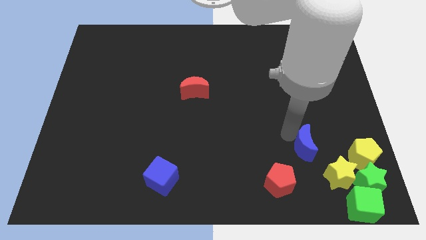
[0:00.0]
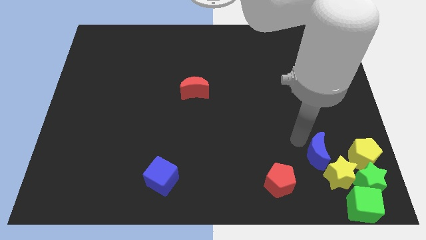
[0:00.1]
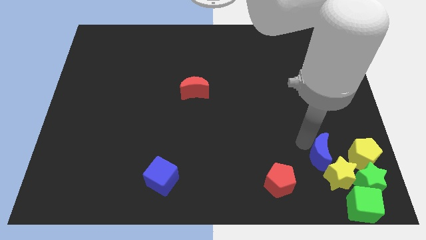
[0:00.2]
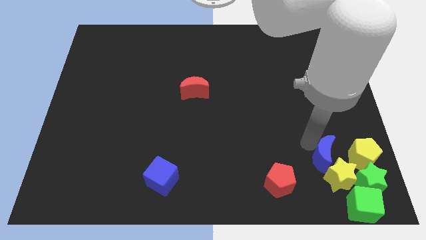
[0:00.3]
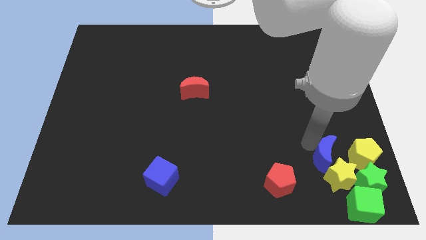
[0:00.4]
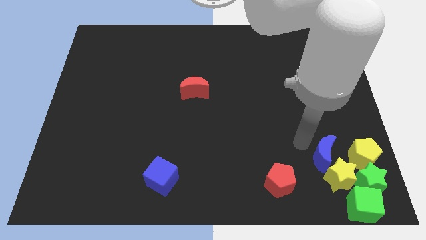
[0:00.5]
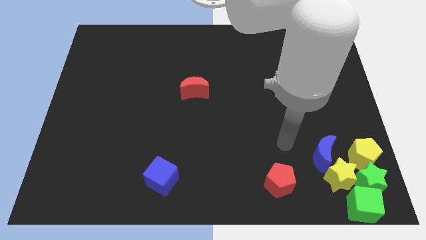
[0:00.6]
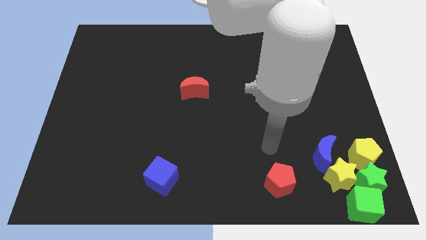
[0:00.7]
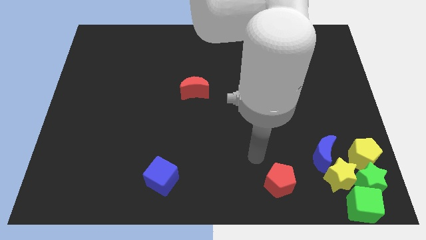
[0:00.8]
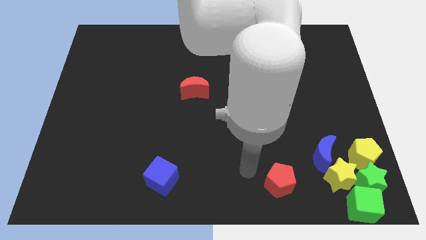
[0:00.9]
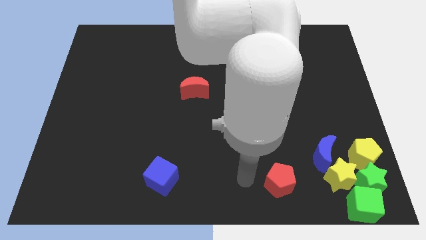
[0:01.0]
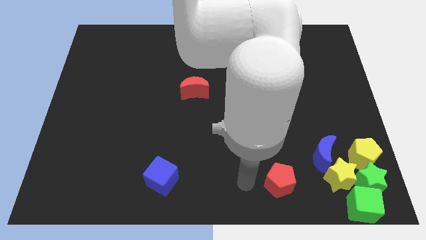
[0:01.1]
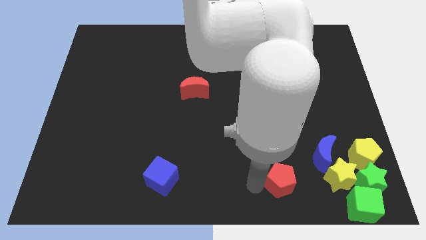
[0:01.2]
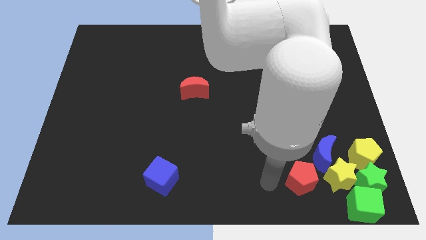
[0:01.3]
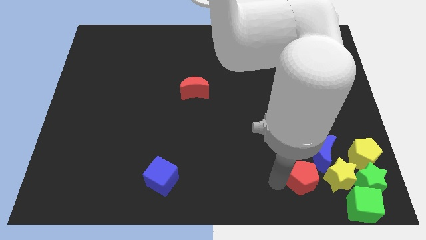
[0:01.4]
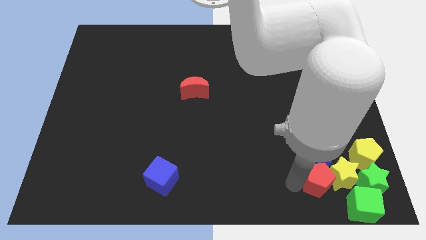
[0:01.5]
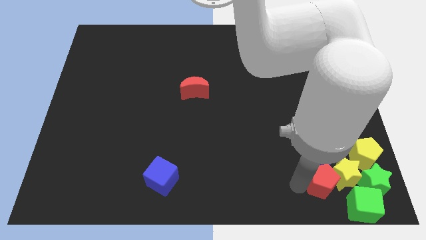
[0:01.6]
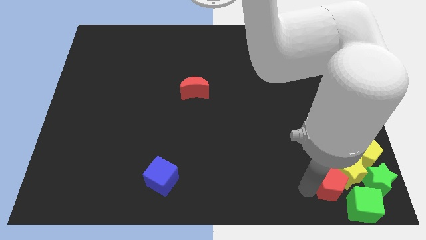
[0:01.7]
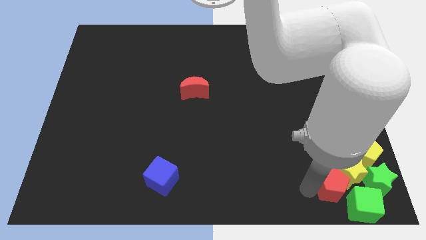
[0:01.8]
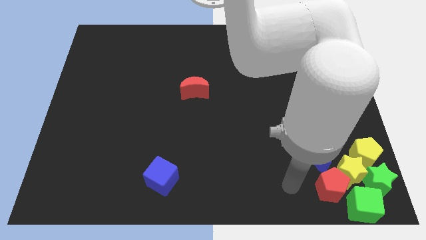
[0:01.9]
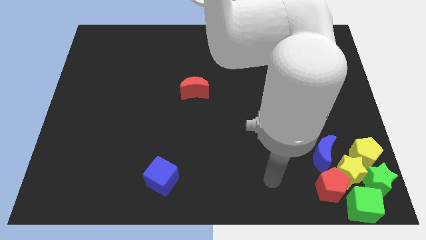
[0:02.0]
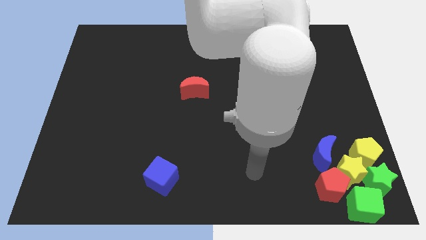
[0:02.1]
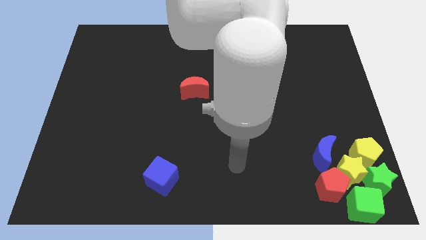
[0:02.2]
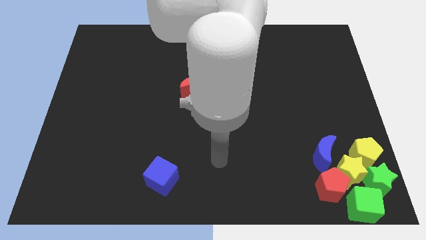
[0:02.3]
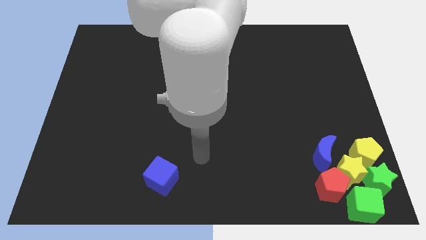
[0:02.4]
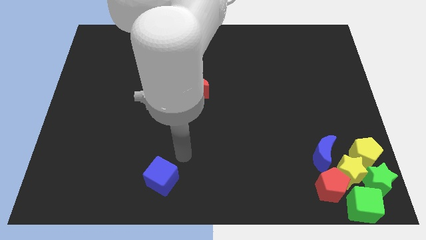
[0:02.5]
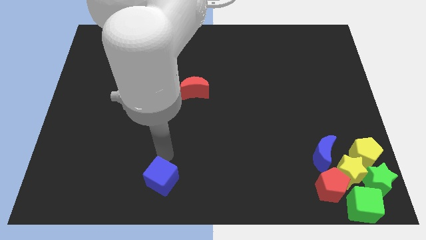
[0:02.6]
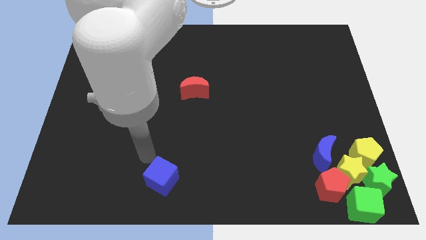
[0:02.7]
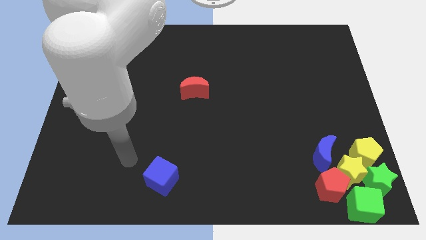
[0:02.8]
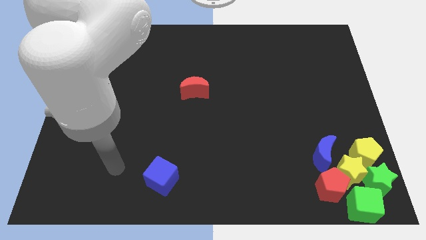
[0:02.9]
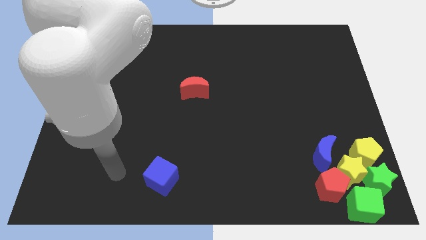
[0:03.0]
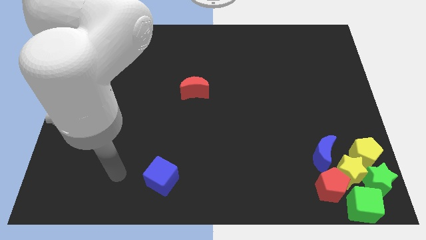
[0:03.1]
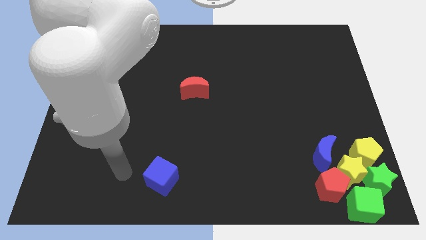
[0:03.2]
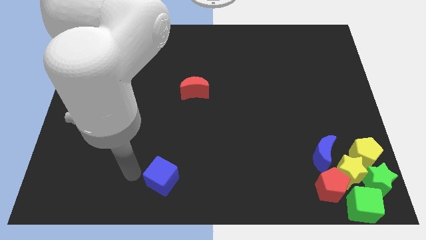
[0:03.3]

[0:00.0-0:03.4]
push the red pentagon into the group of blocks

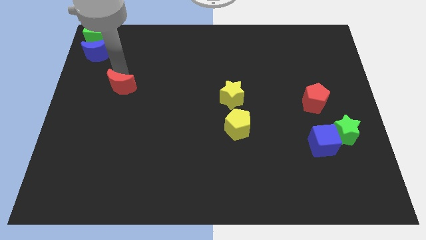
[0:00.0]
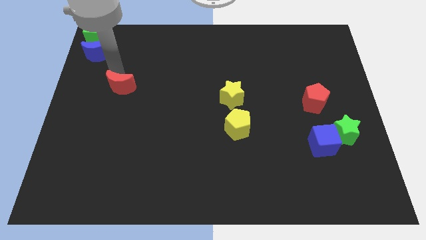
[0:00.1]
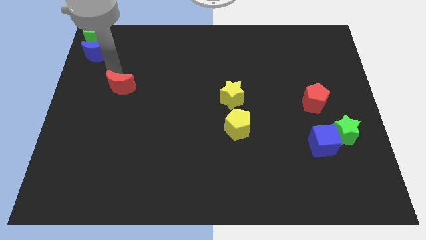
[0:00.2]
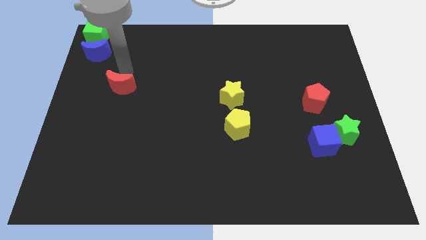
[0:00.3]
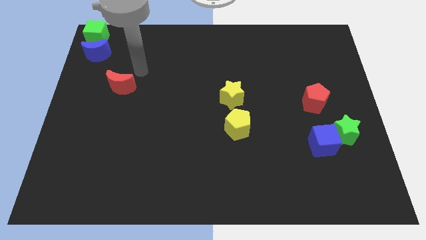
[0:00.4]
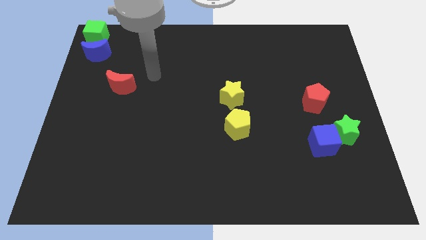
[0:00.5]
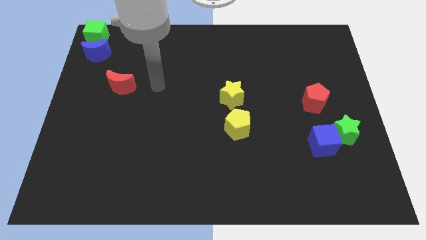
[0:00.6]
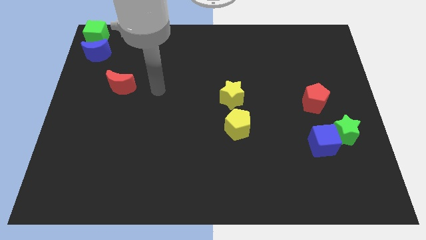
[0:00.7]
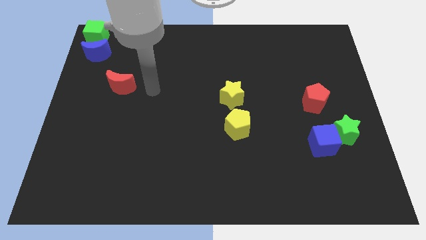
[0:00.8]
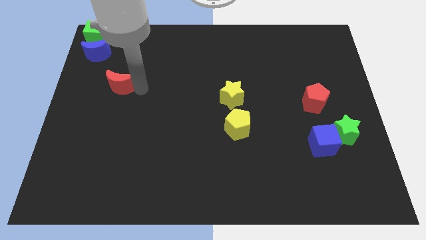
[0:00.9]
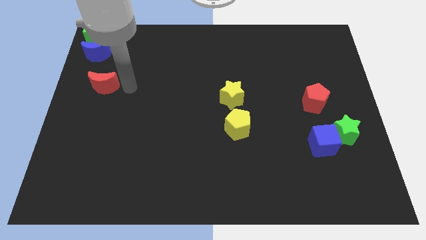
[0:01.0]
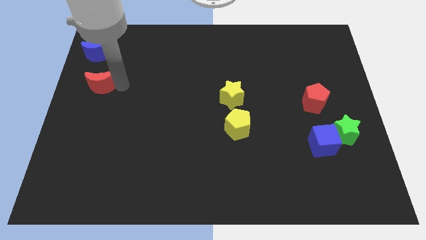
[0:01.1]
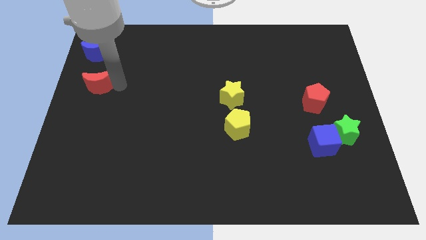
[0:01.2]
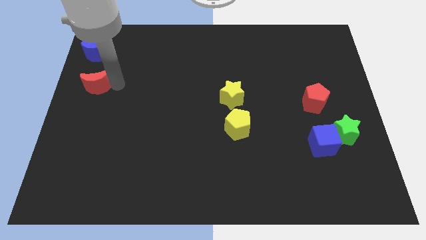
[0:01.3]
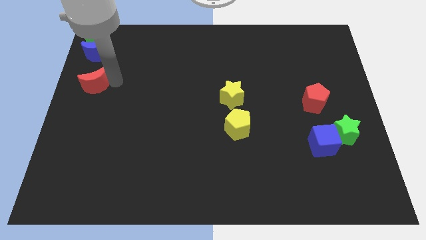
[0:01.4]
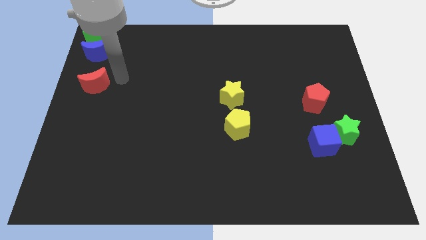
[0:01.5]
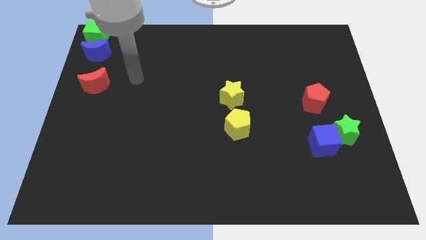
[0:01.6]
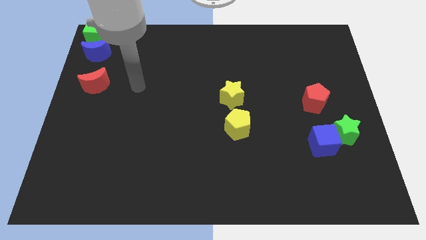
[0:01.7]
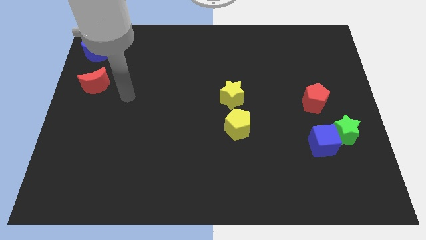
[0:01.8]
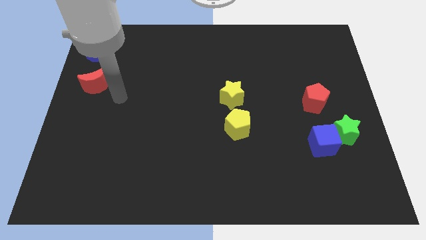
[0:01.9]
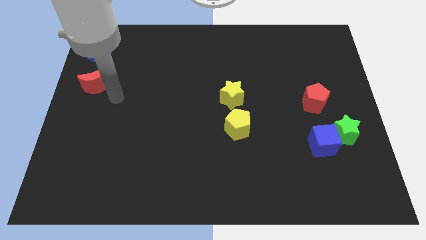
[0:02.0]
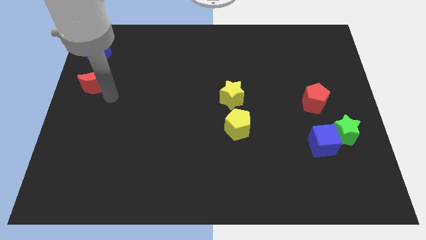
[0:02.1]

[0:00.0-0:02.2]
place the red crescent under the blue crescent

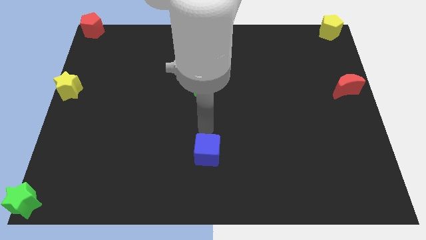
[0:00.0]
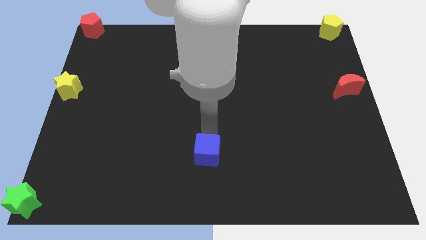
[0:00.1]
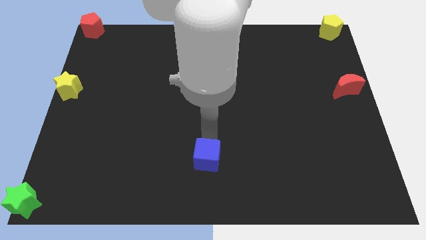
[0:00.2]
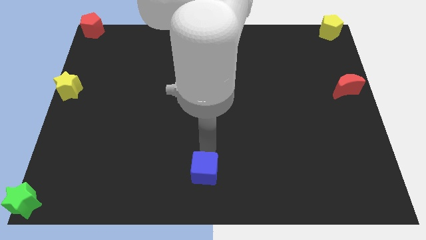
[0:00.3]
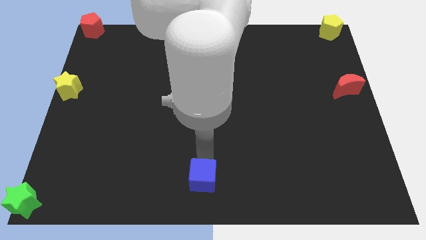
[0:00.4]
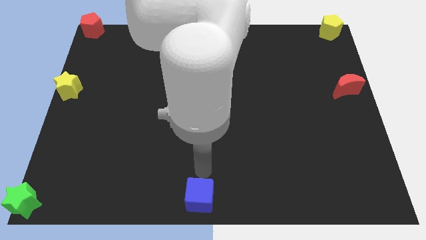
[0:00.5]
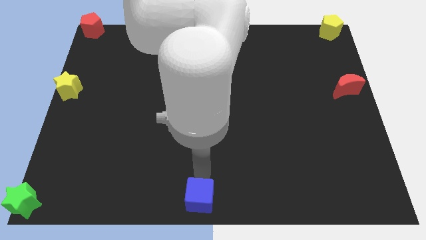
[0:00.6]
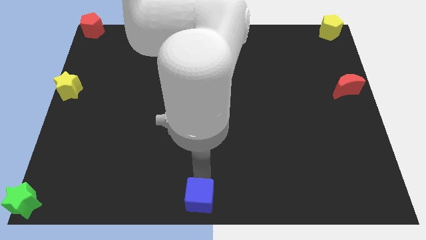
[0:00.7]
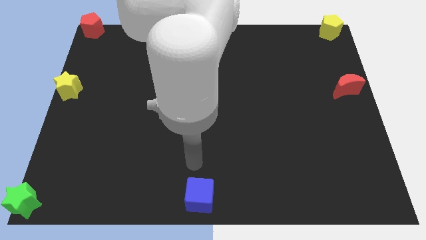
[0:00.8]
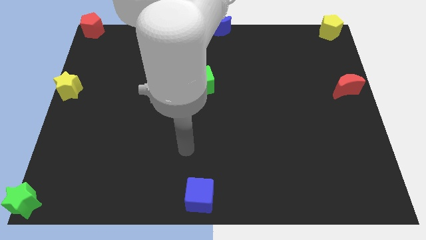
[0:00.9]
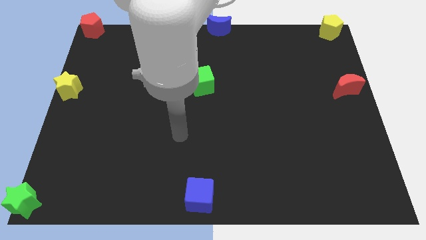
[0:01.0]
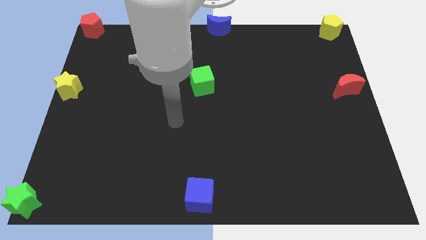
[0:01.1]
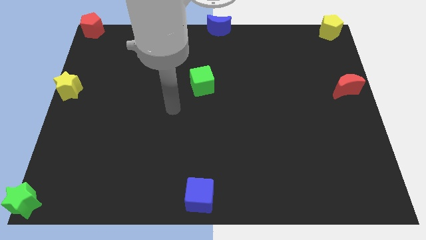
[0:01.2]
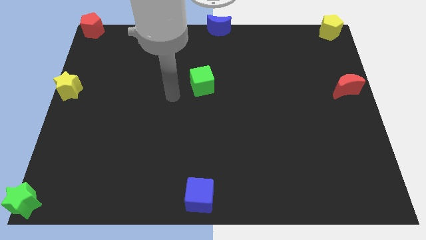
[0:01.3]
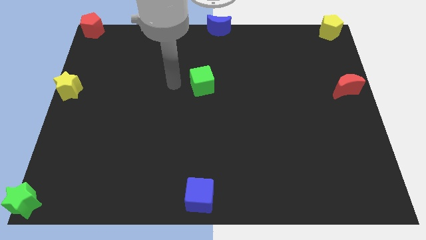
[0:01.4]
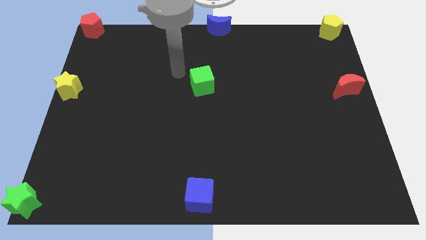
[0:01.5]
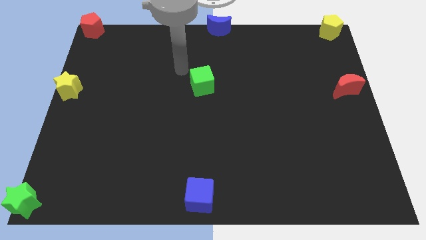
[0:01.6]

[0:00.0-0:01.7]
place the blue cube to the bottom center of the board

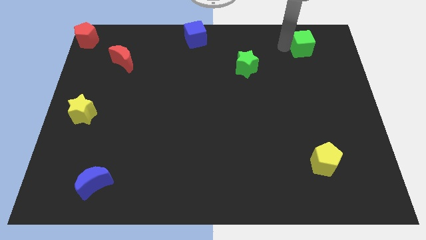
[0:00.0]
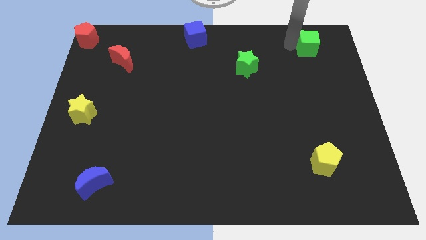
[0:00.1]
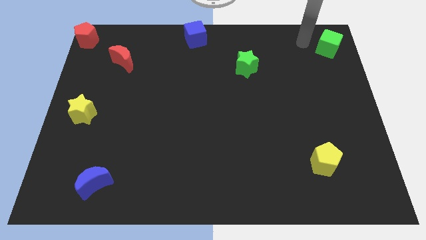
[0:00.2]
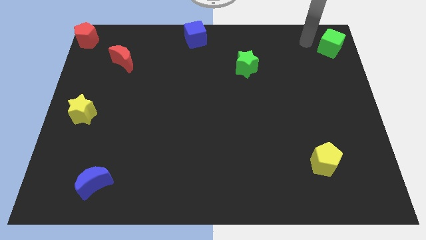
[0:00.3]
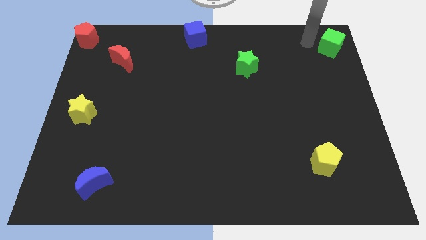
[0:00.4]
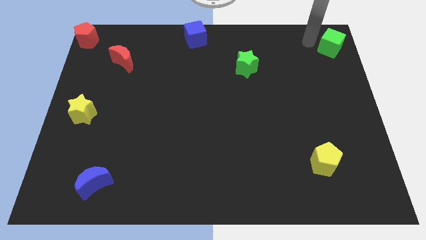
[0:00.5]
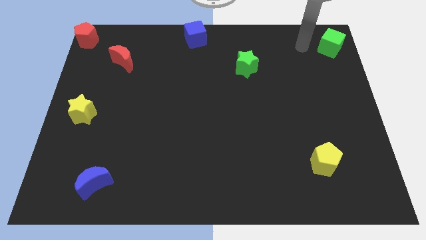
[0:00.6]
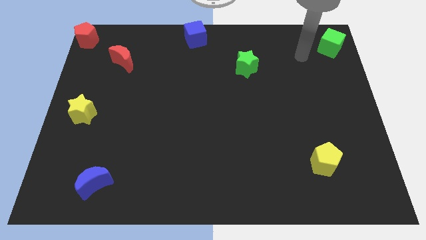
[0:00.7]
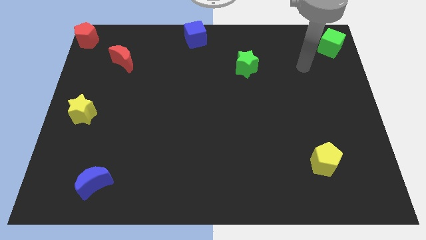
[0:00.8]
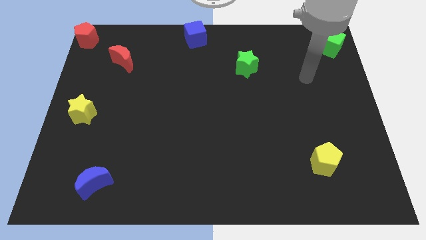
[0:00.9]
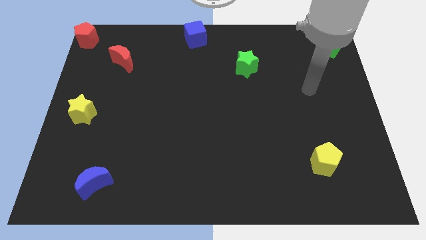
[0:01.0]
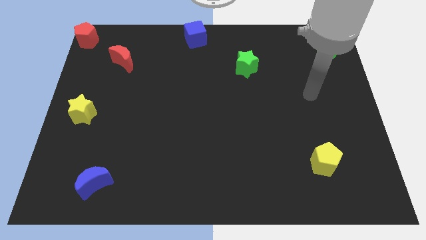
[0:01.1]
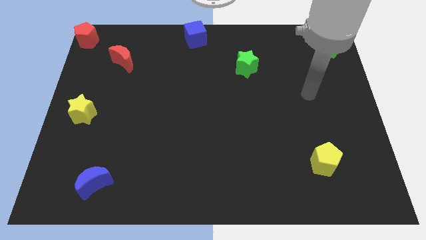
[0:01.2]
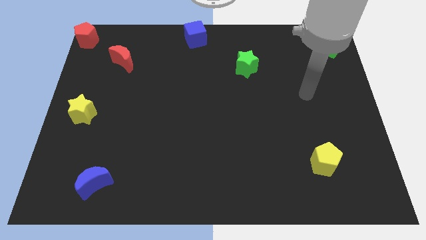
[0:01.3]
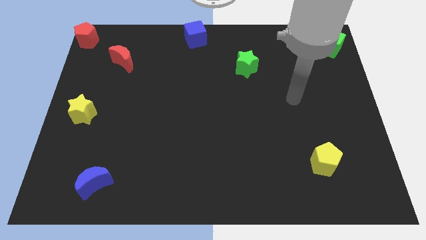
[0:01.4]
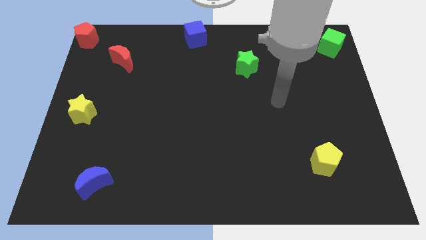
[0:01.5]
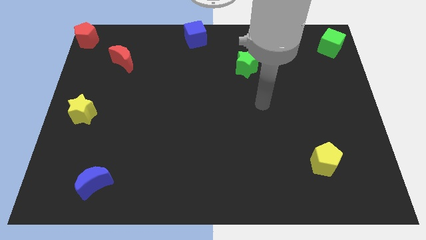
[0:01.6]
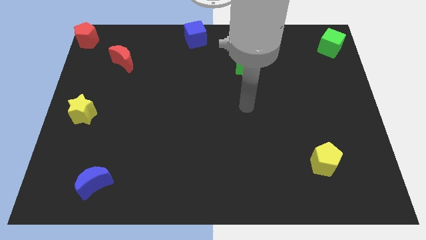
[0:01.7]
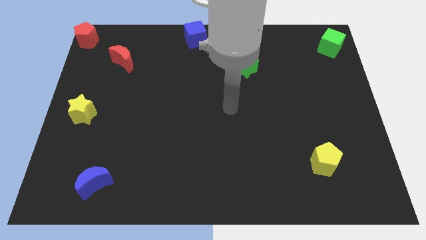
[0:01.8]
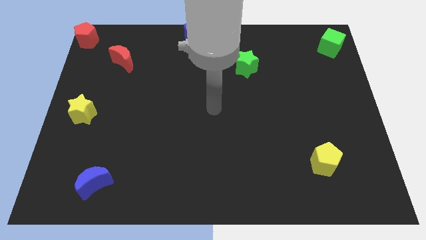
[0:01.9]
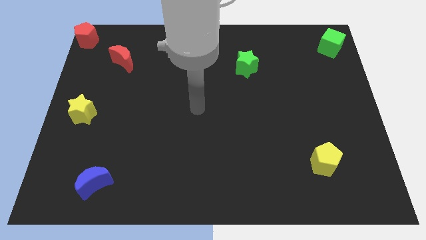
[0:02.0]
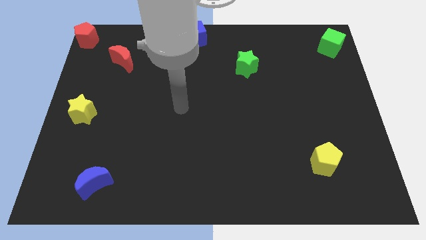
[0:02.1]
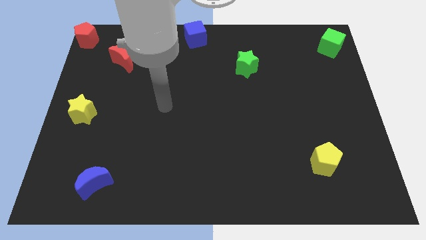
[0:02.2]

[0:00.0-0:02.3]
place a green cube to the top right corner of the board
